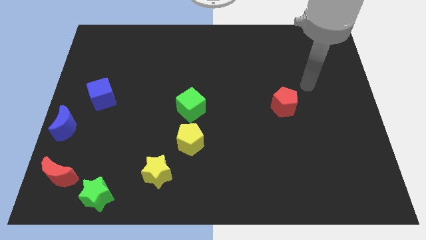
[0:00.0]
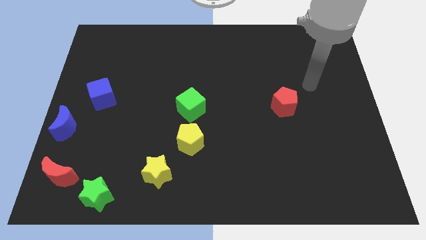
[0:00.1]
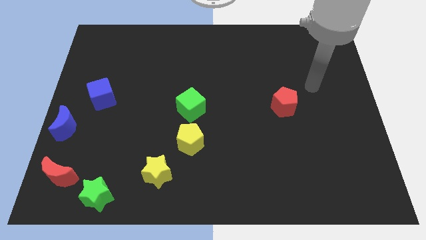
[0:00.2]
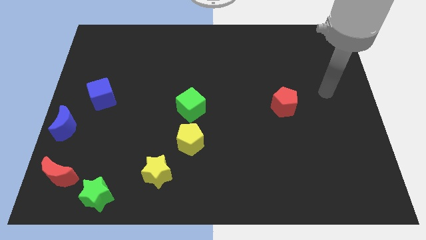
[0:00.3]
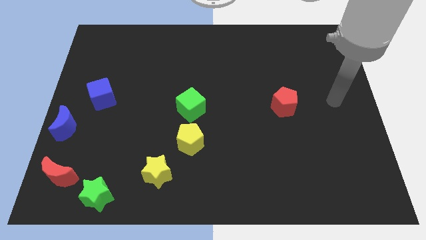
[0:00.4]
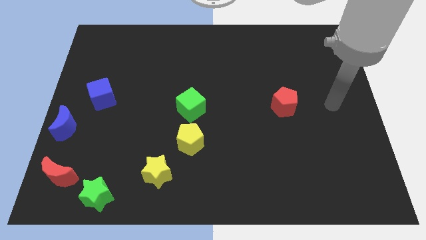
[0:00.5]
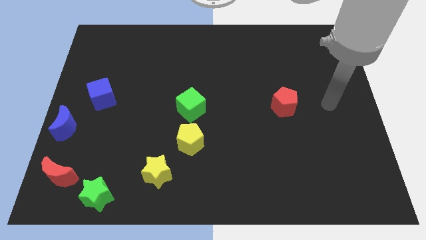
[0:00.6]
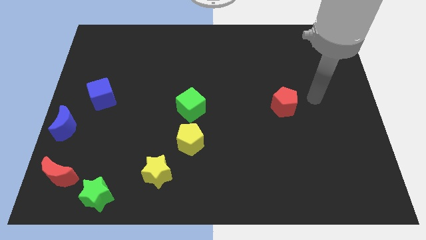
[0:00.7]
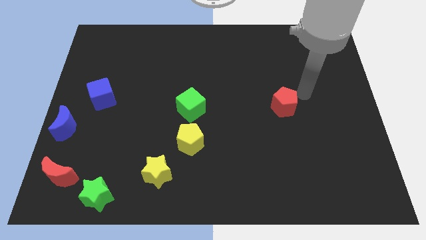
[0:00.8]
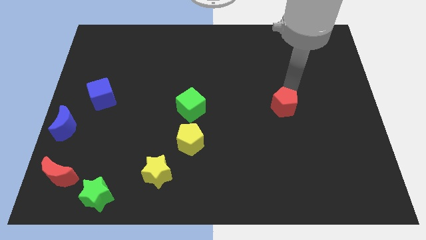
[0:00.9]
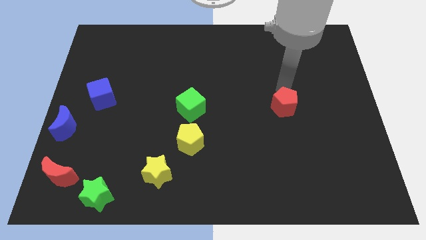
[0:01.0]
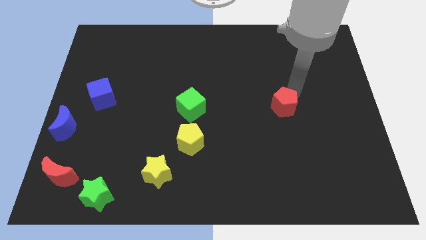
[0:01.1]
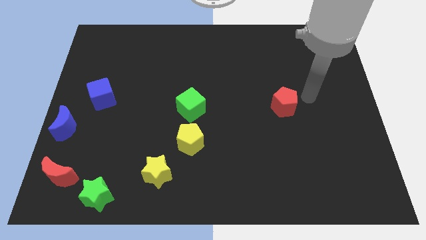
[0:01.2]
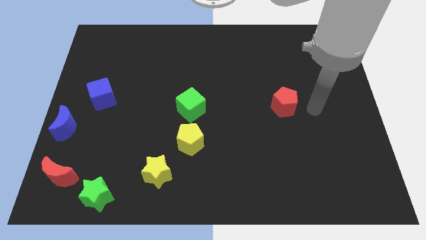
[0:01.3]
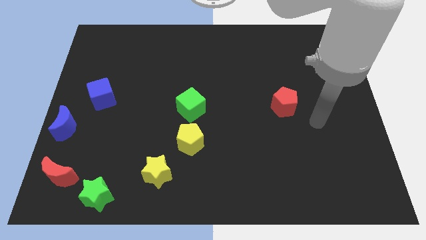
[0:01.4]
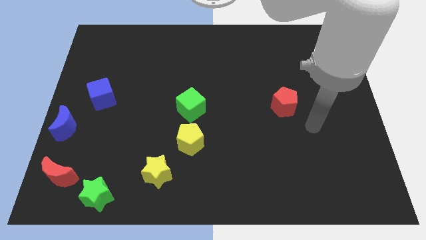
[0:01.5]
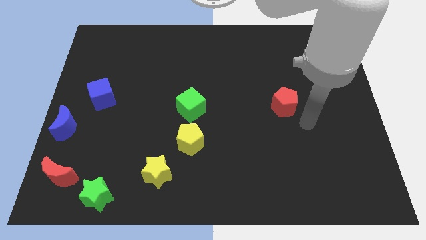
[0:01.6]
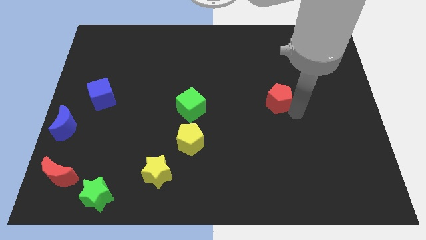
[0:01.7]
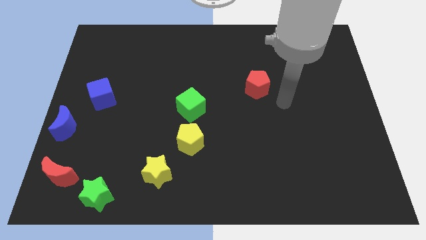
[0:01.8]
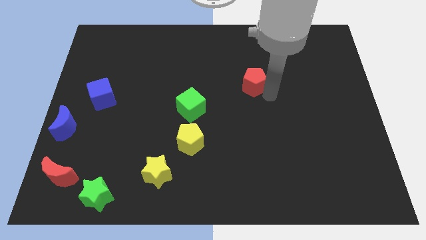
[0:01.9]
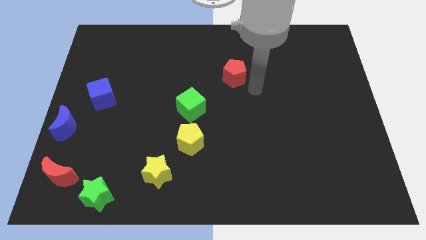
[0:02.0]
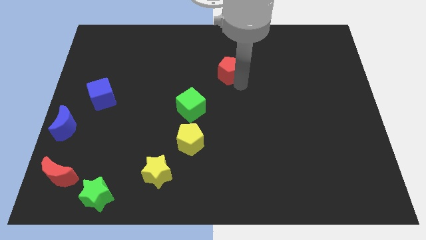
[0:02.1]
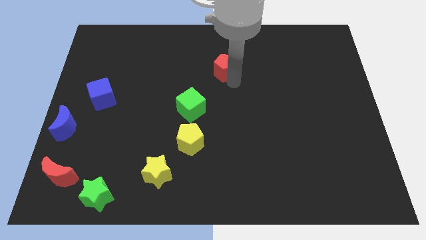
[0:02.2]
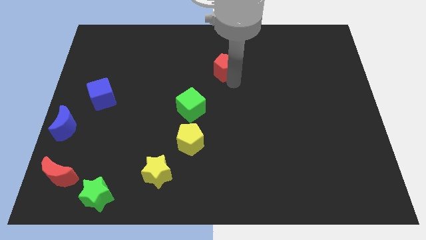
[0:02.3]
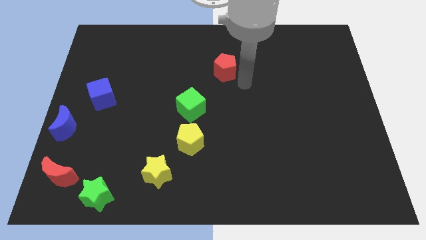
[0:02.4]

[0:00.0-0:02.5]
push the red pentagon towards the top center

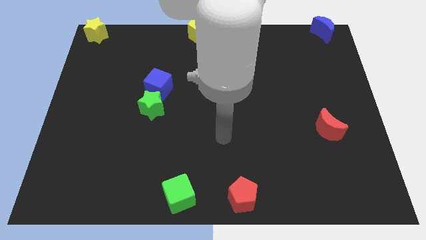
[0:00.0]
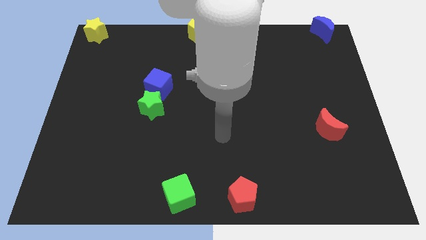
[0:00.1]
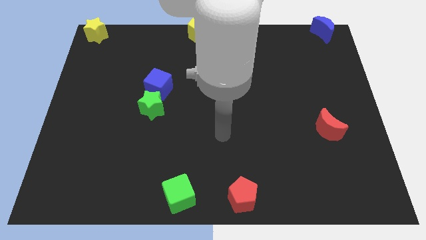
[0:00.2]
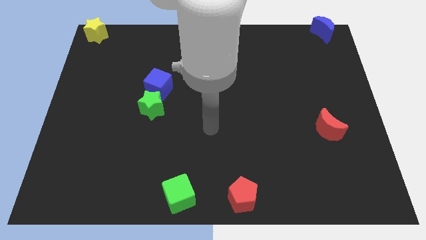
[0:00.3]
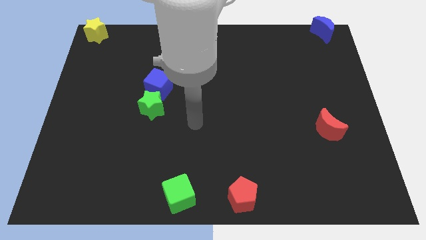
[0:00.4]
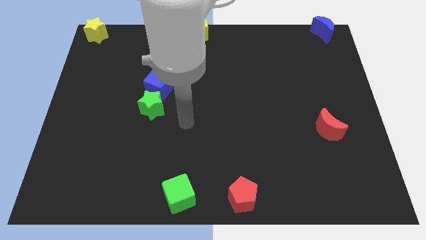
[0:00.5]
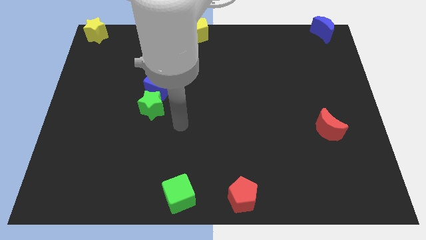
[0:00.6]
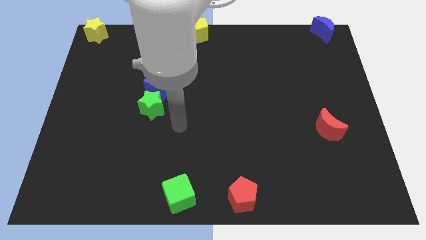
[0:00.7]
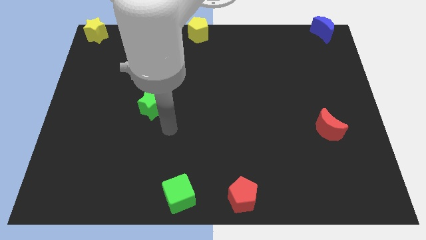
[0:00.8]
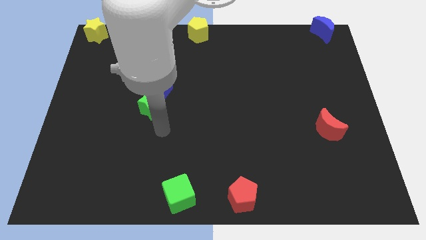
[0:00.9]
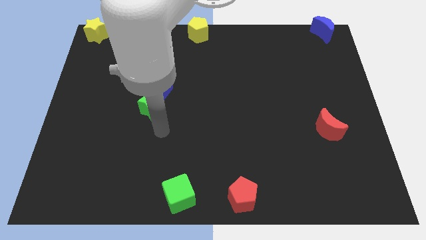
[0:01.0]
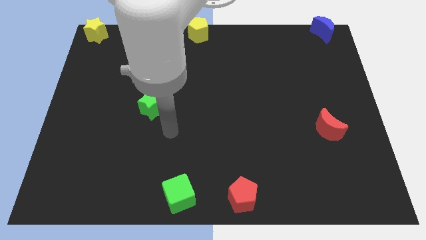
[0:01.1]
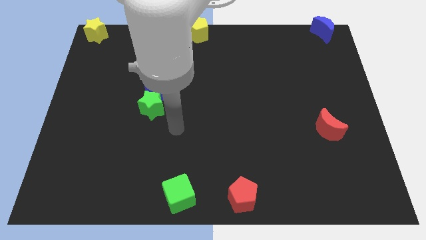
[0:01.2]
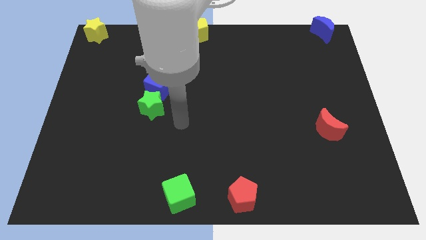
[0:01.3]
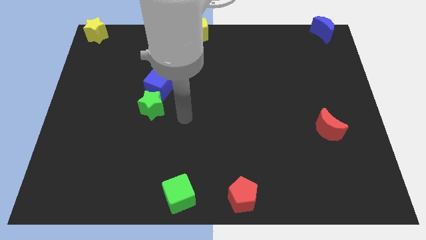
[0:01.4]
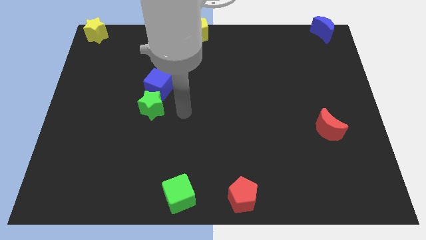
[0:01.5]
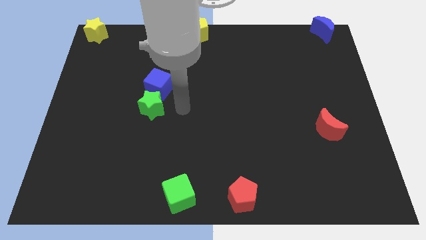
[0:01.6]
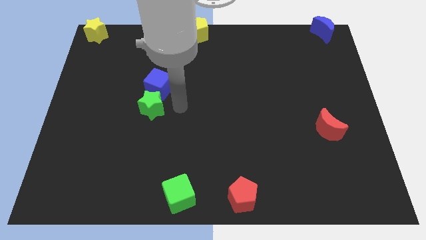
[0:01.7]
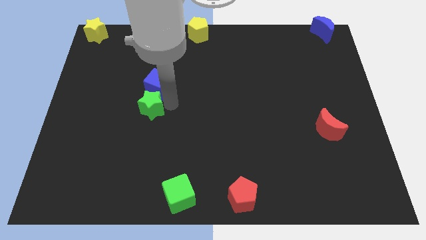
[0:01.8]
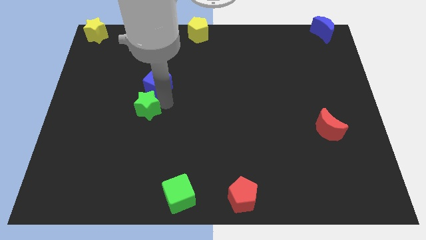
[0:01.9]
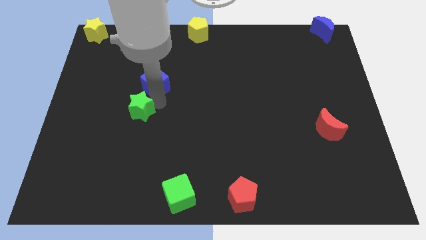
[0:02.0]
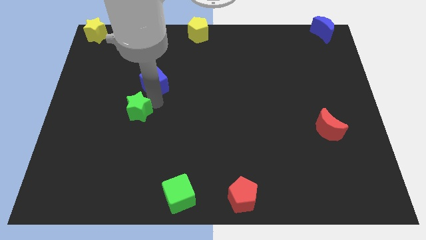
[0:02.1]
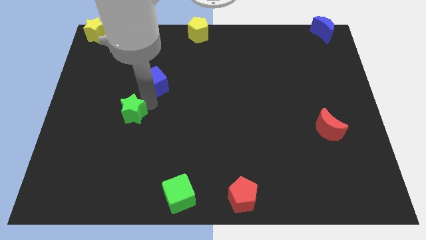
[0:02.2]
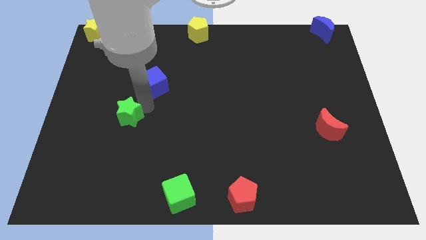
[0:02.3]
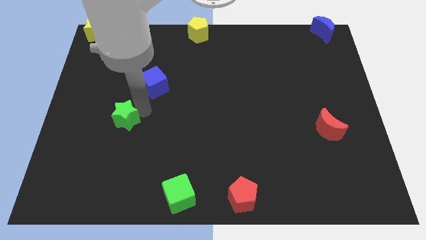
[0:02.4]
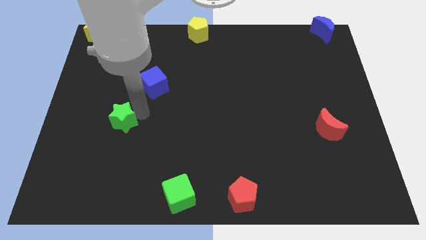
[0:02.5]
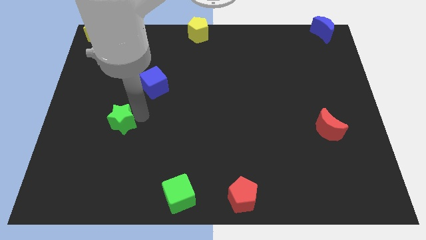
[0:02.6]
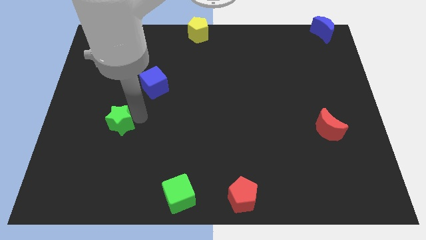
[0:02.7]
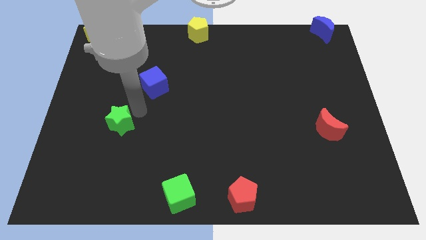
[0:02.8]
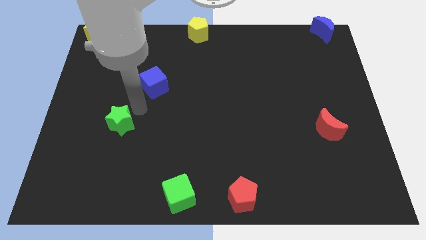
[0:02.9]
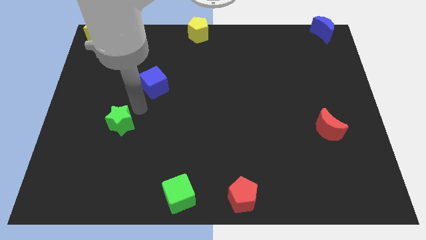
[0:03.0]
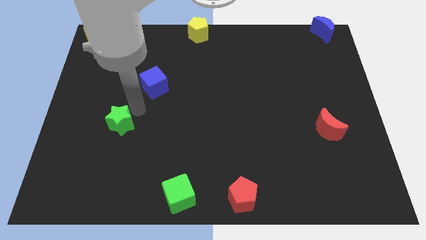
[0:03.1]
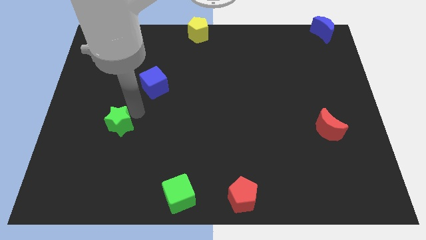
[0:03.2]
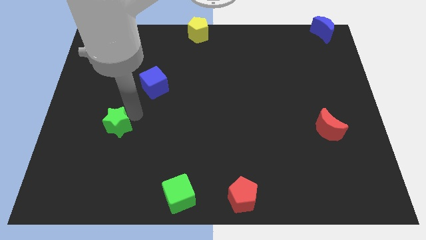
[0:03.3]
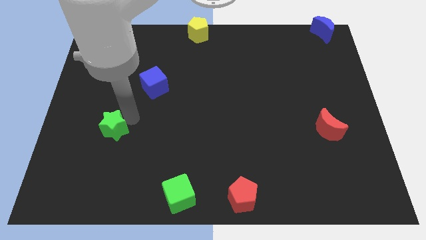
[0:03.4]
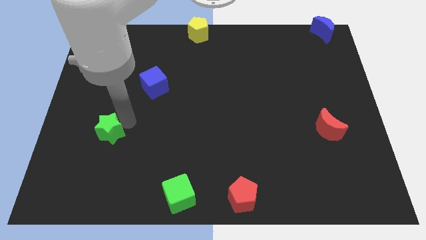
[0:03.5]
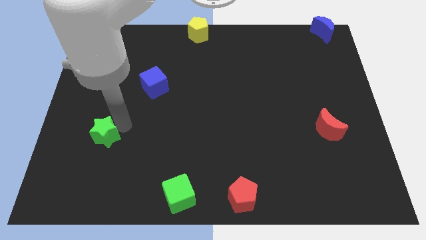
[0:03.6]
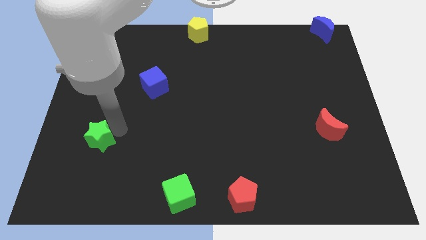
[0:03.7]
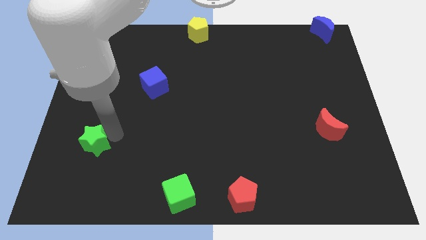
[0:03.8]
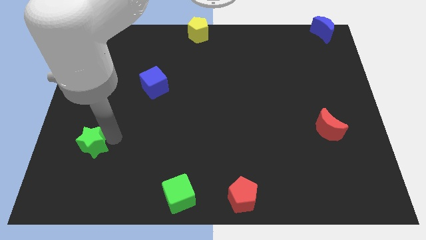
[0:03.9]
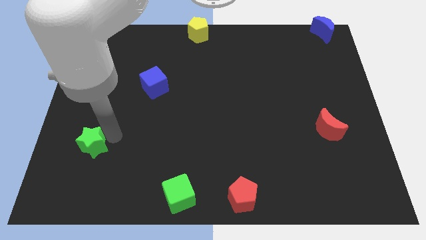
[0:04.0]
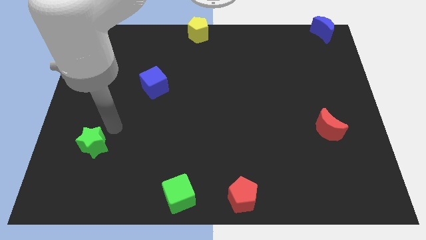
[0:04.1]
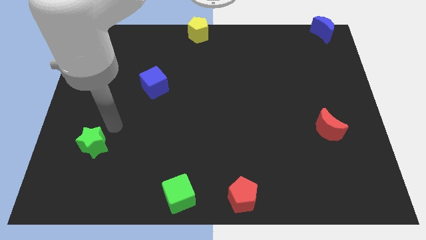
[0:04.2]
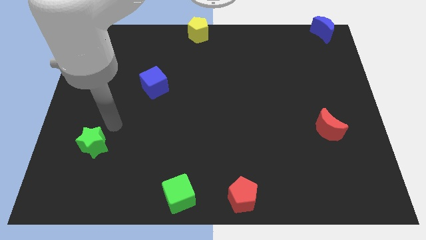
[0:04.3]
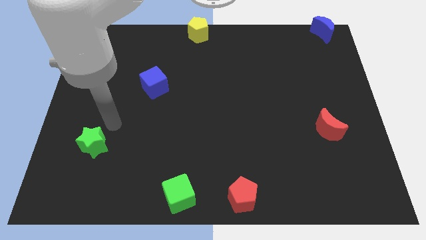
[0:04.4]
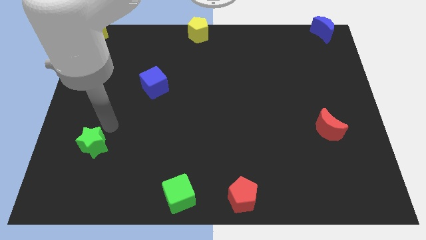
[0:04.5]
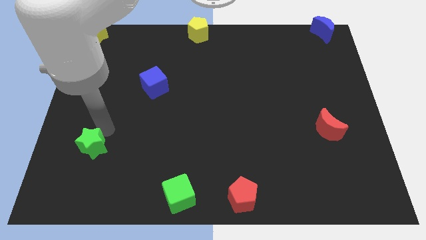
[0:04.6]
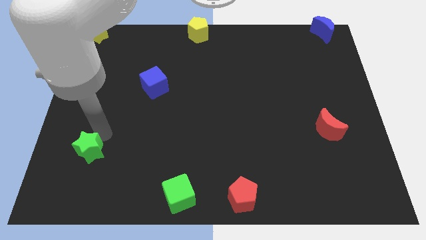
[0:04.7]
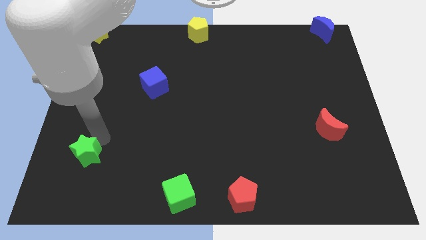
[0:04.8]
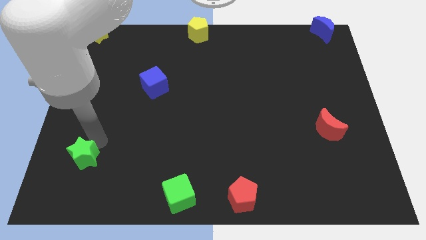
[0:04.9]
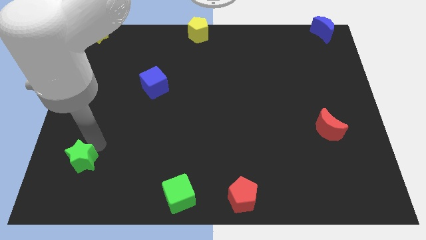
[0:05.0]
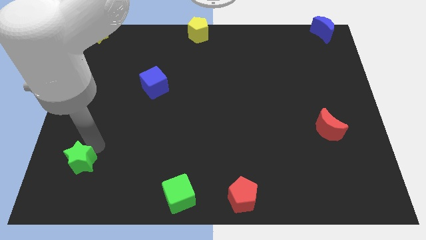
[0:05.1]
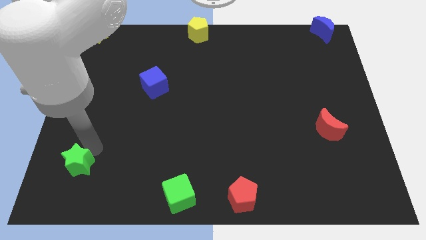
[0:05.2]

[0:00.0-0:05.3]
push the green star towards the bottom left corner of the board

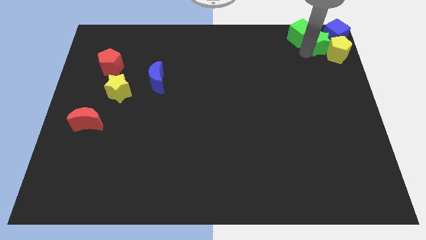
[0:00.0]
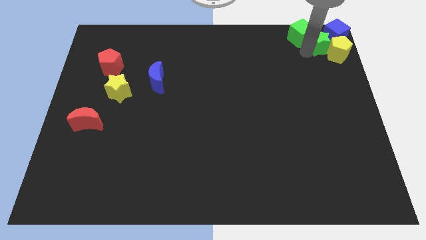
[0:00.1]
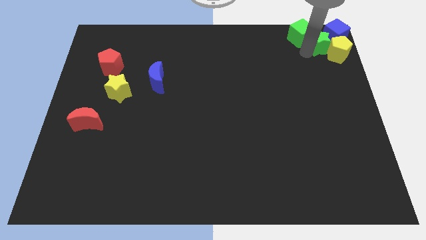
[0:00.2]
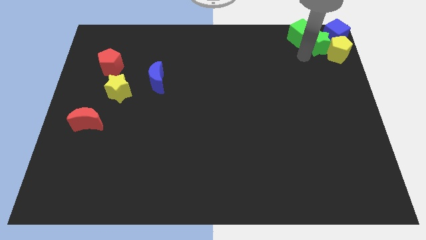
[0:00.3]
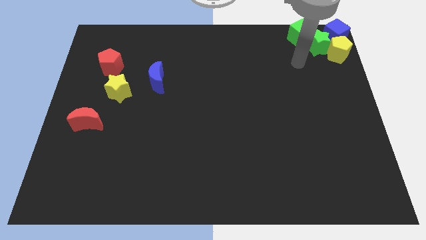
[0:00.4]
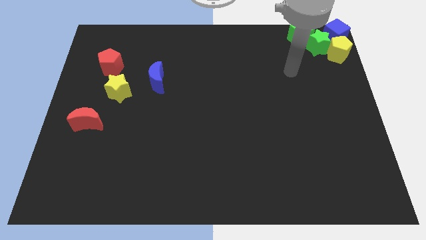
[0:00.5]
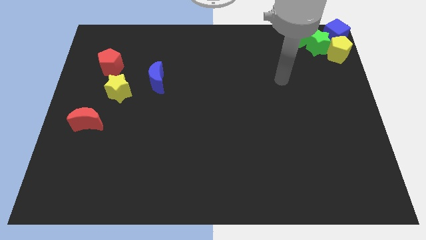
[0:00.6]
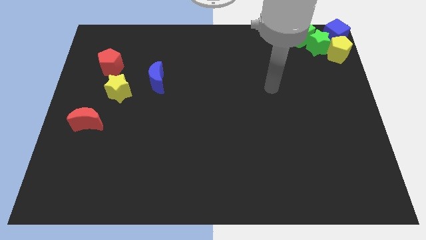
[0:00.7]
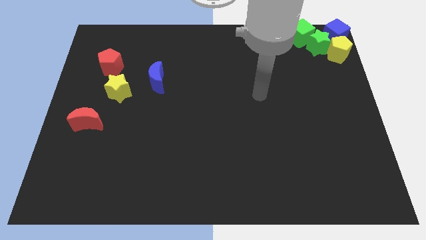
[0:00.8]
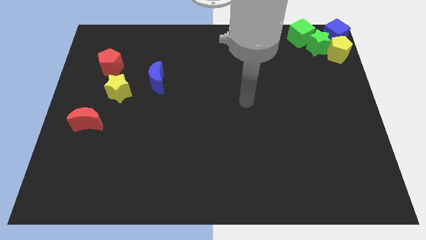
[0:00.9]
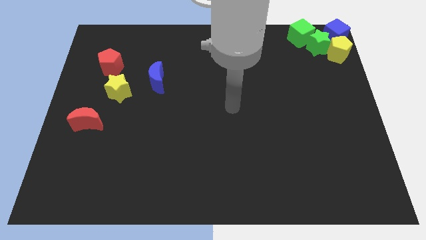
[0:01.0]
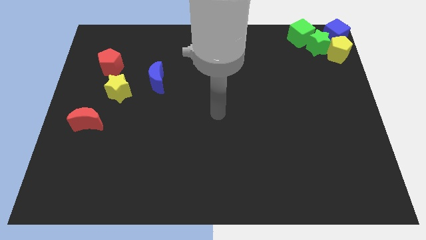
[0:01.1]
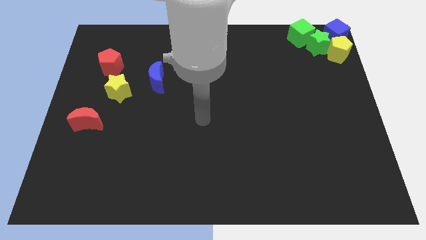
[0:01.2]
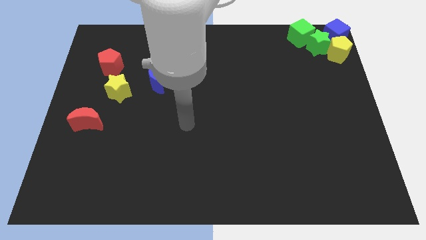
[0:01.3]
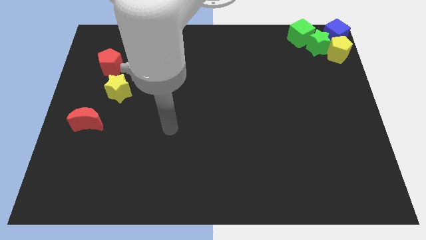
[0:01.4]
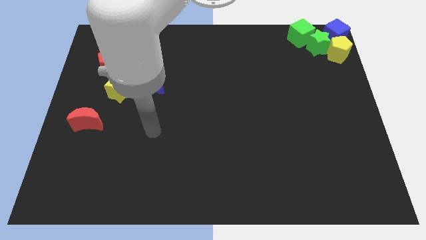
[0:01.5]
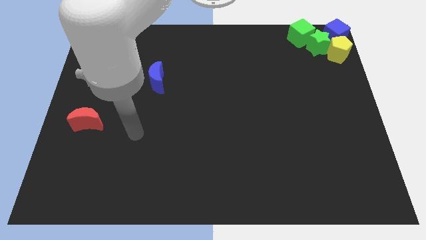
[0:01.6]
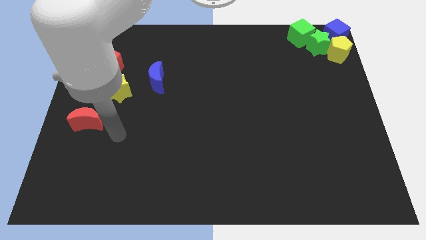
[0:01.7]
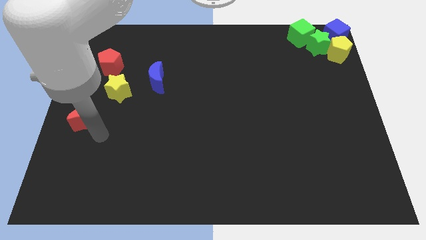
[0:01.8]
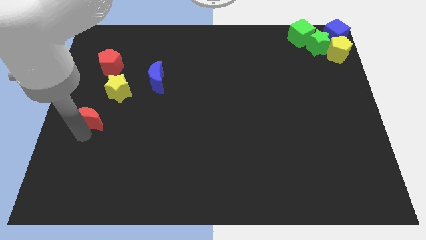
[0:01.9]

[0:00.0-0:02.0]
move your hand towards the red moon
